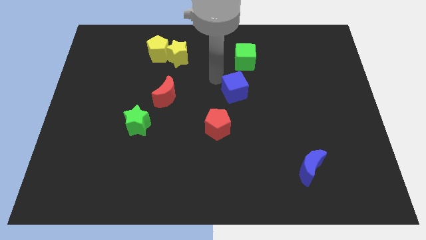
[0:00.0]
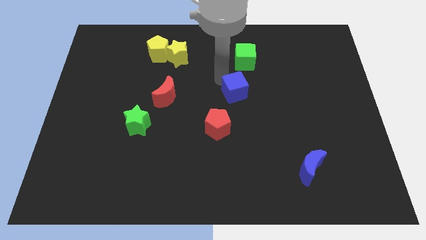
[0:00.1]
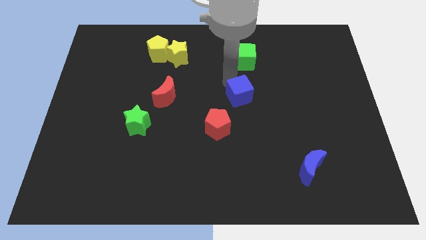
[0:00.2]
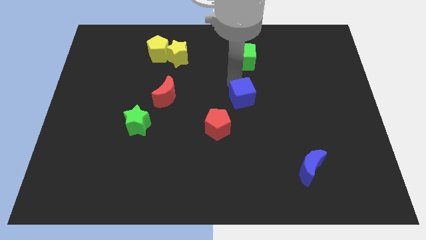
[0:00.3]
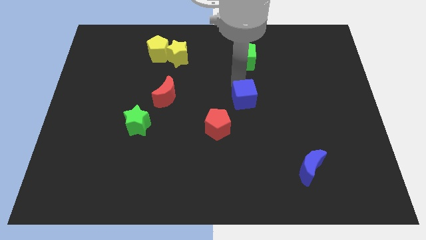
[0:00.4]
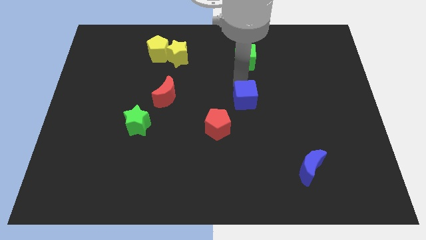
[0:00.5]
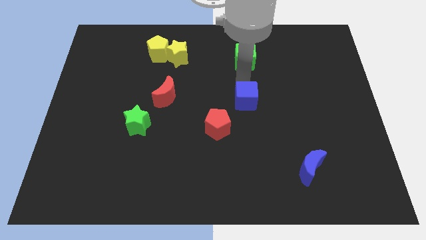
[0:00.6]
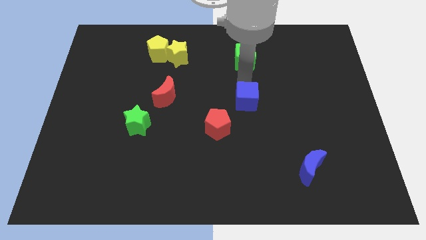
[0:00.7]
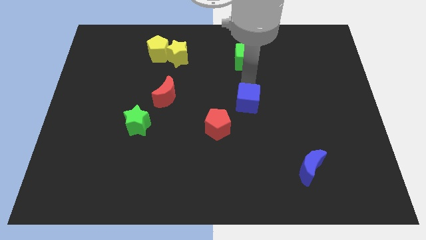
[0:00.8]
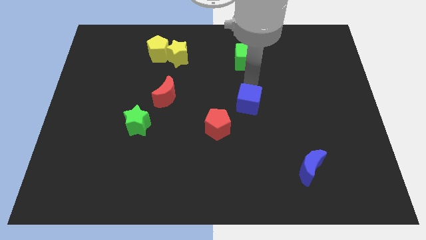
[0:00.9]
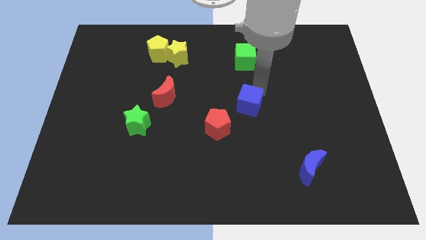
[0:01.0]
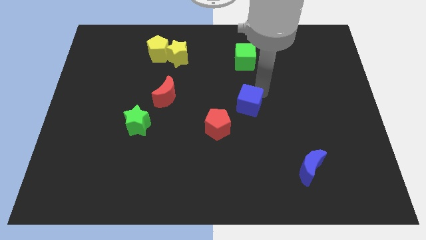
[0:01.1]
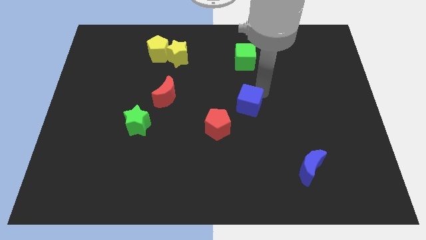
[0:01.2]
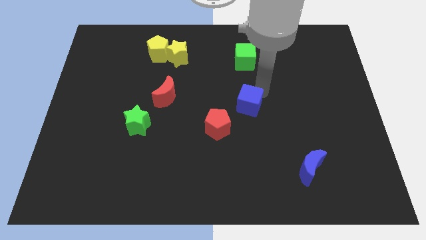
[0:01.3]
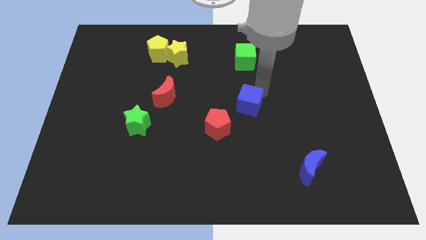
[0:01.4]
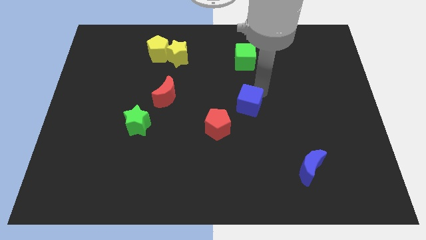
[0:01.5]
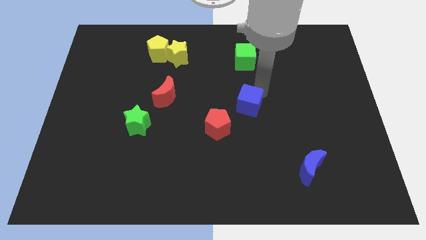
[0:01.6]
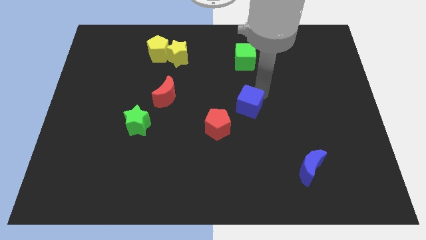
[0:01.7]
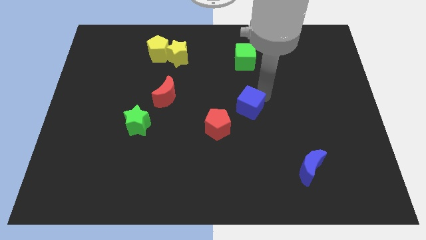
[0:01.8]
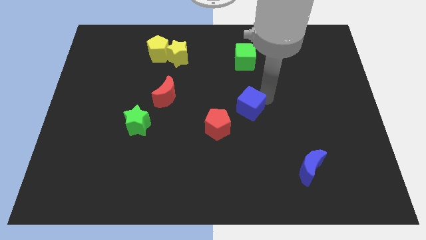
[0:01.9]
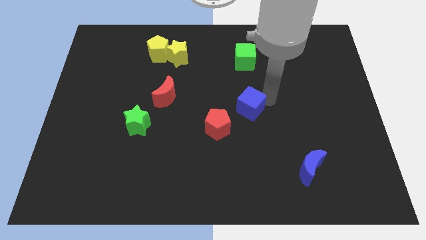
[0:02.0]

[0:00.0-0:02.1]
move blue cube below the green cube

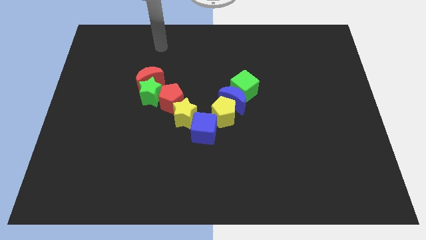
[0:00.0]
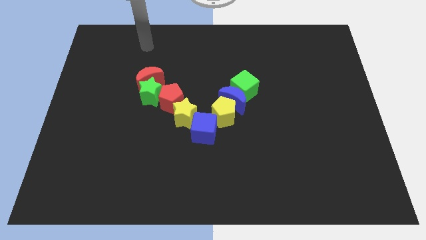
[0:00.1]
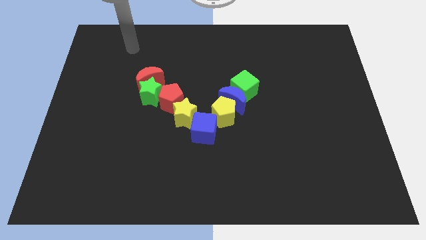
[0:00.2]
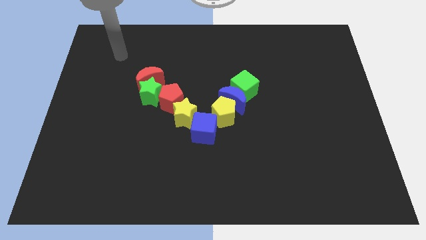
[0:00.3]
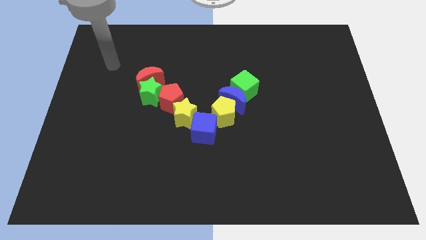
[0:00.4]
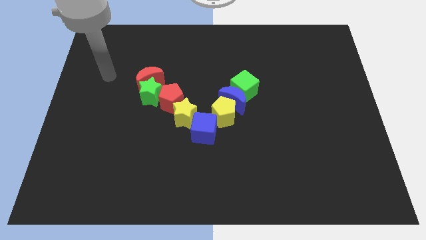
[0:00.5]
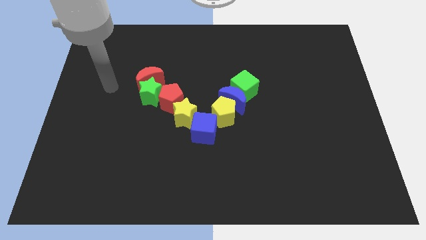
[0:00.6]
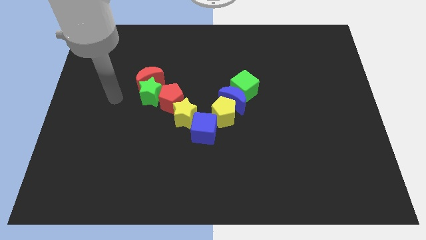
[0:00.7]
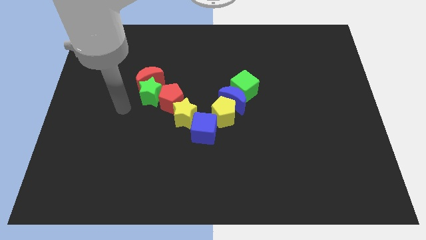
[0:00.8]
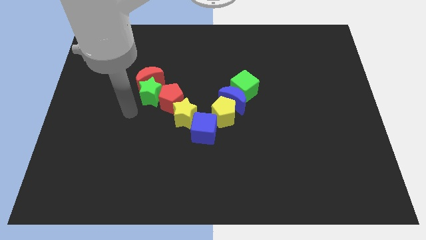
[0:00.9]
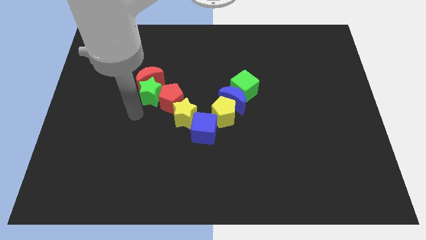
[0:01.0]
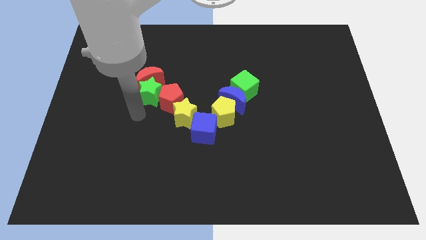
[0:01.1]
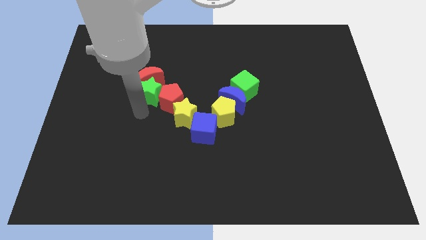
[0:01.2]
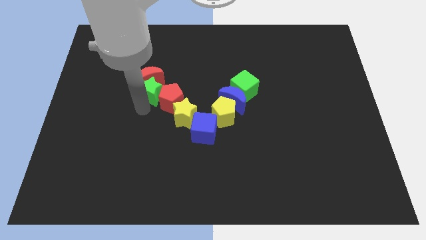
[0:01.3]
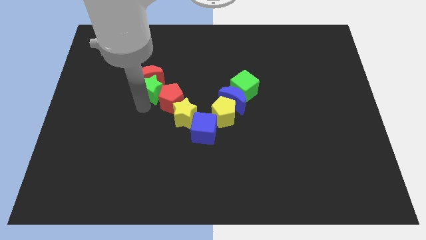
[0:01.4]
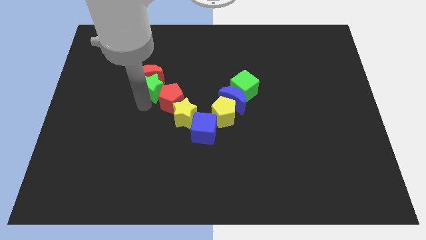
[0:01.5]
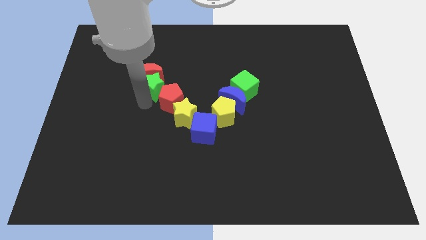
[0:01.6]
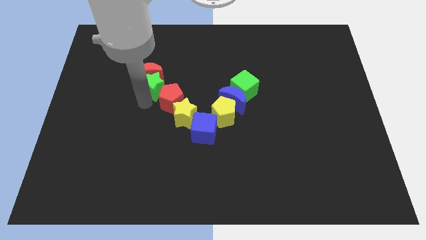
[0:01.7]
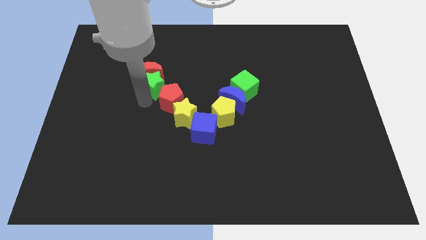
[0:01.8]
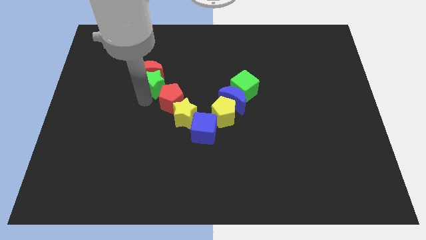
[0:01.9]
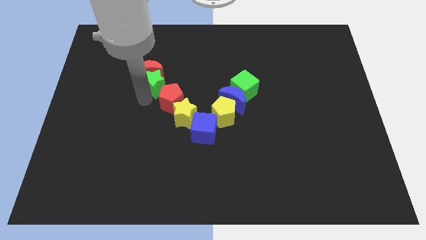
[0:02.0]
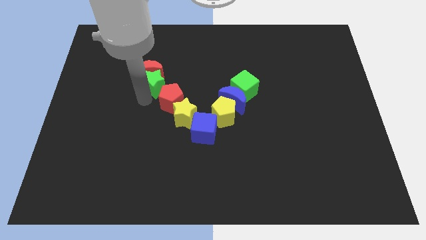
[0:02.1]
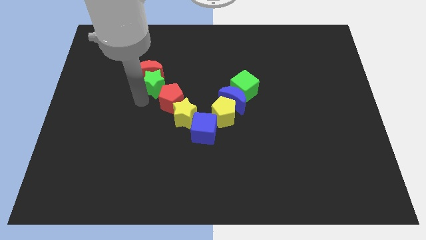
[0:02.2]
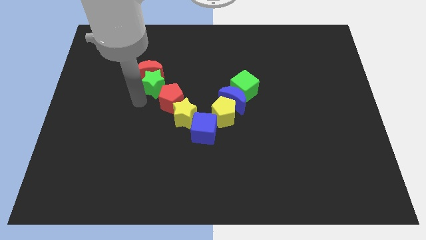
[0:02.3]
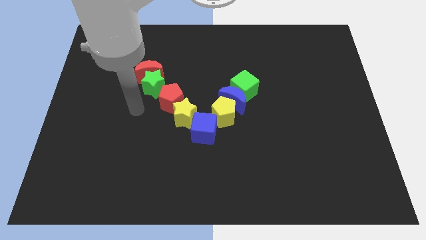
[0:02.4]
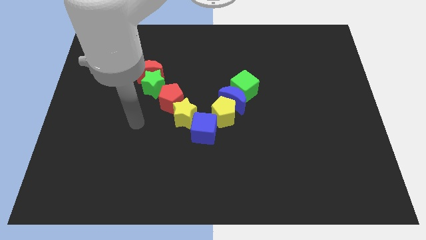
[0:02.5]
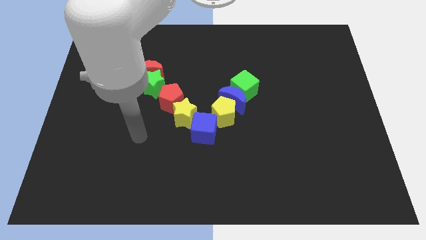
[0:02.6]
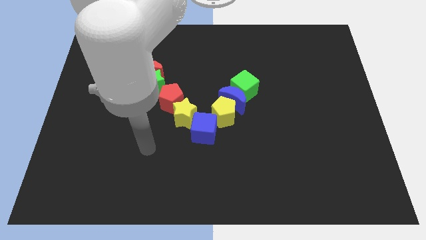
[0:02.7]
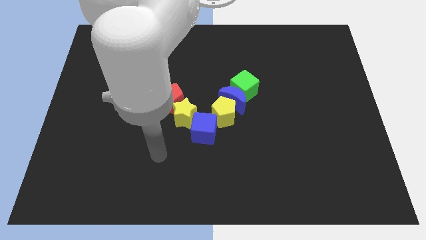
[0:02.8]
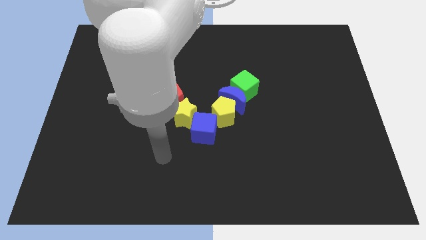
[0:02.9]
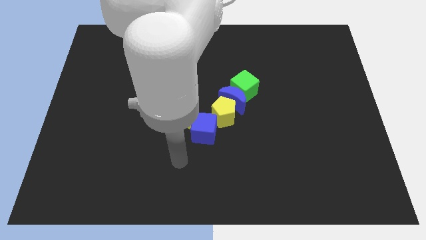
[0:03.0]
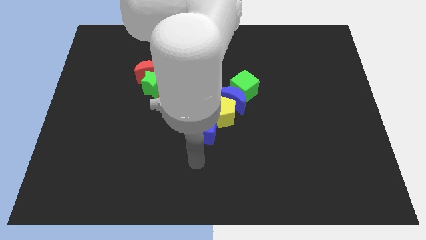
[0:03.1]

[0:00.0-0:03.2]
move the green star into the red crescent

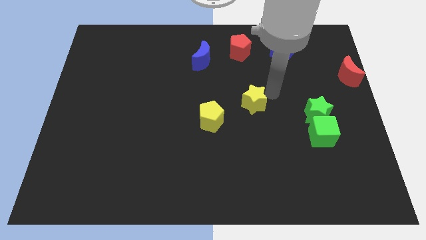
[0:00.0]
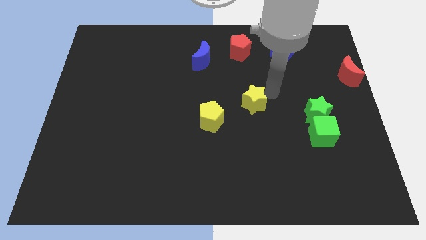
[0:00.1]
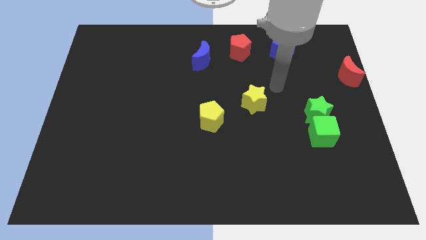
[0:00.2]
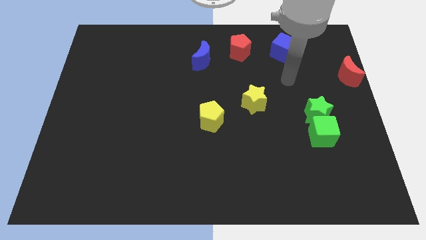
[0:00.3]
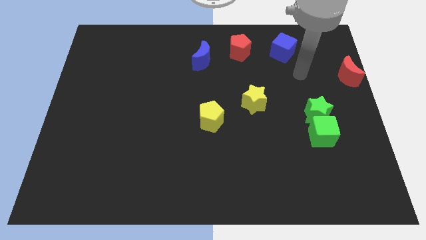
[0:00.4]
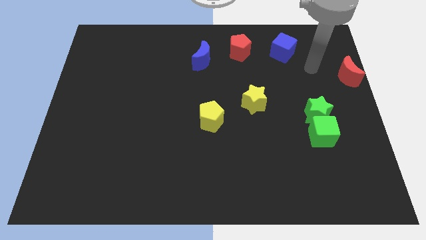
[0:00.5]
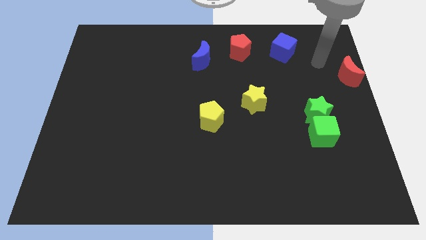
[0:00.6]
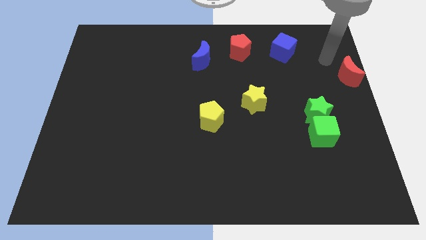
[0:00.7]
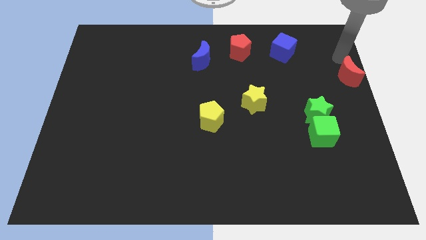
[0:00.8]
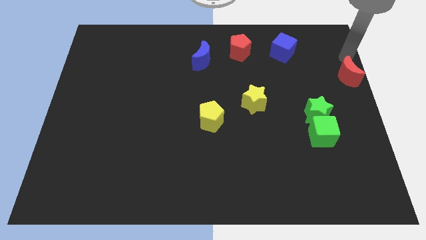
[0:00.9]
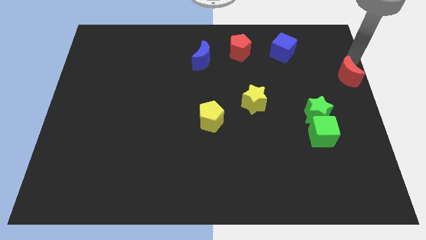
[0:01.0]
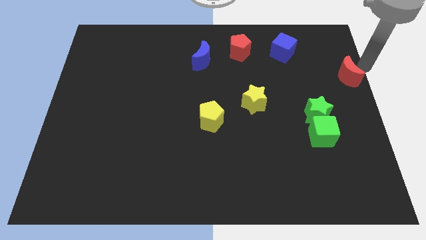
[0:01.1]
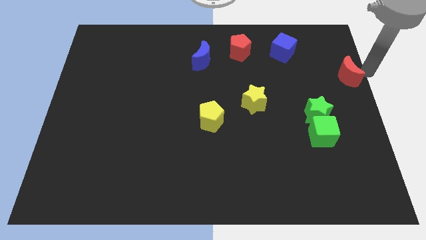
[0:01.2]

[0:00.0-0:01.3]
move your arm to the right of the red crescent

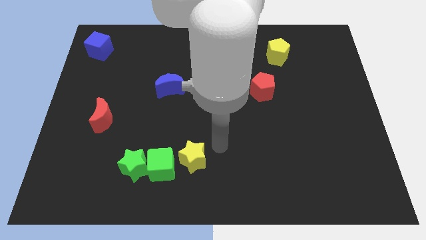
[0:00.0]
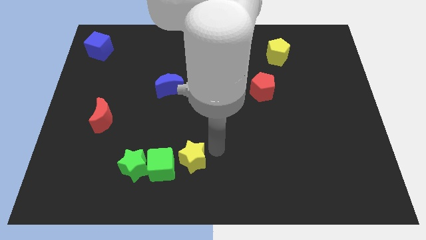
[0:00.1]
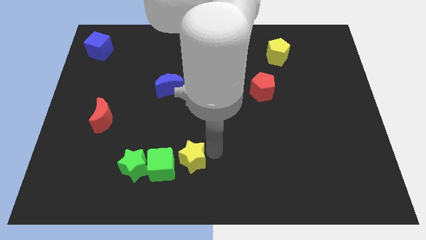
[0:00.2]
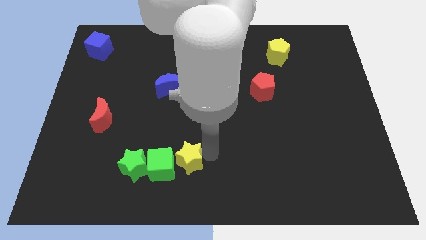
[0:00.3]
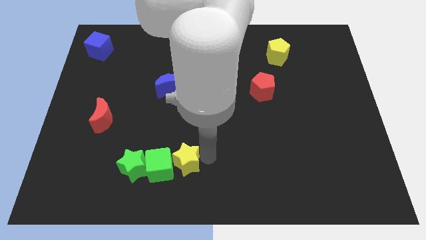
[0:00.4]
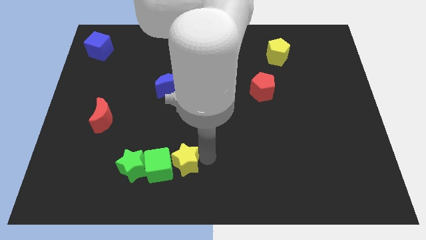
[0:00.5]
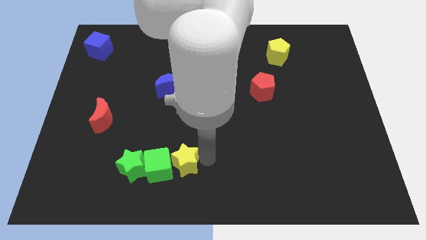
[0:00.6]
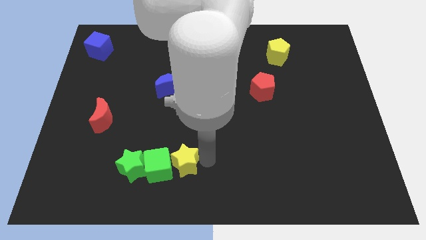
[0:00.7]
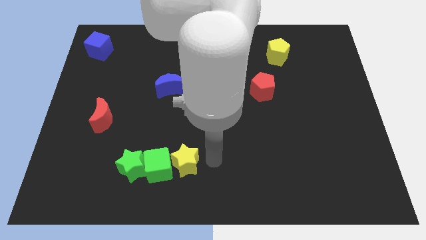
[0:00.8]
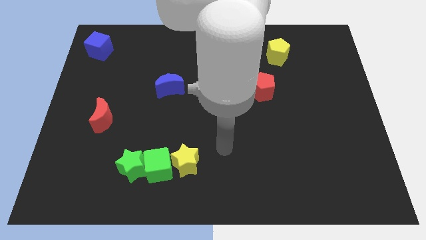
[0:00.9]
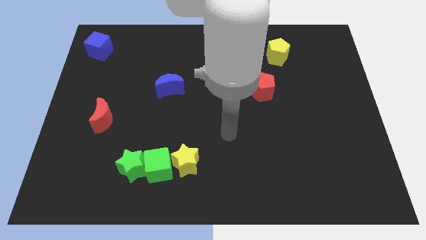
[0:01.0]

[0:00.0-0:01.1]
push yellow star into the green cube

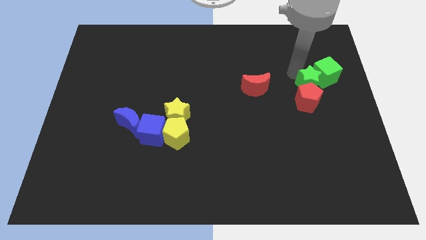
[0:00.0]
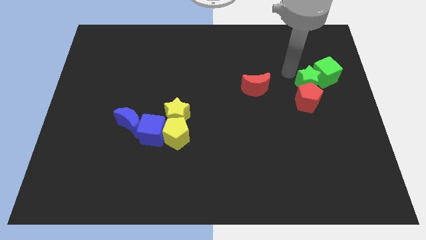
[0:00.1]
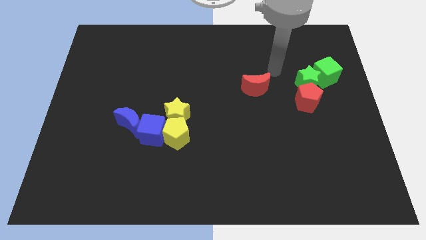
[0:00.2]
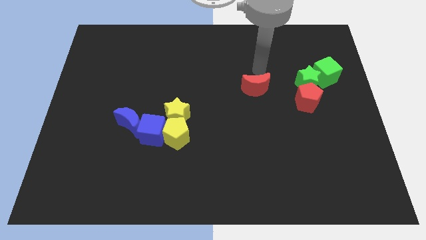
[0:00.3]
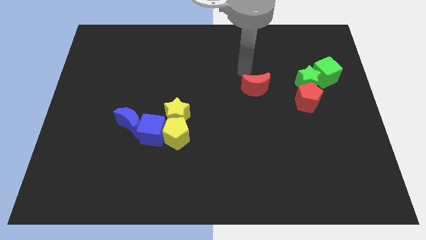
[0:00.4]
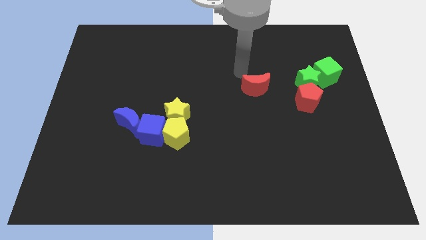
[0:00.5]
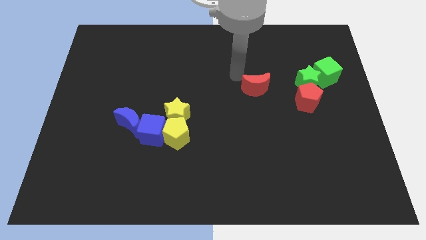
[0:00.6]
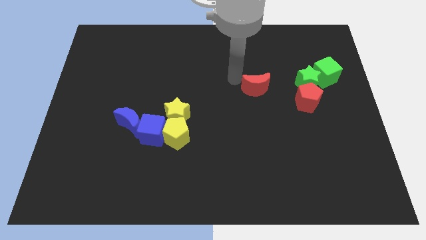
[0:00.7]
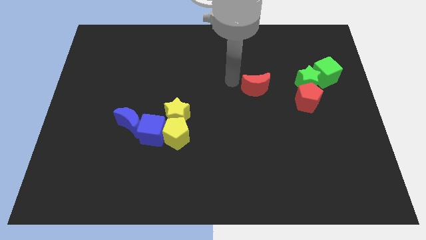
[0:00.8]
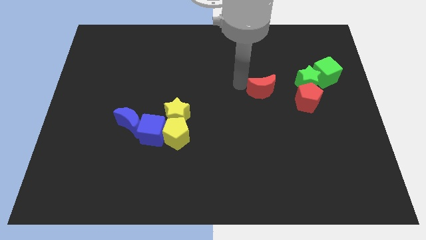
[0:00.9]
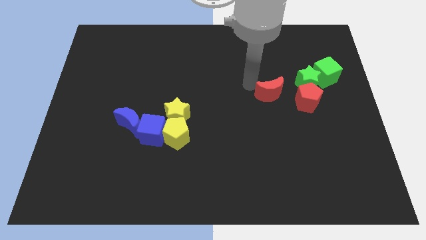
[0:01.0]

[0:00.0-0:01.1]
move the red moon slightly
